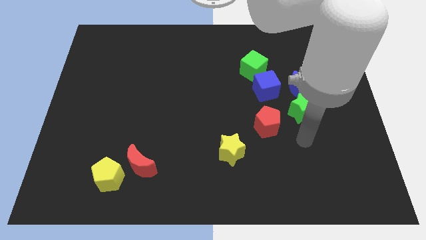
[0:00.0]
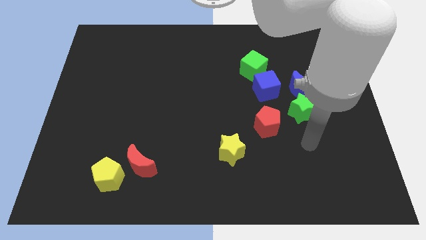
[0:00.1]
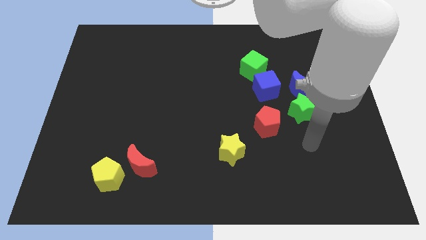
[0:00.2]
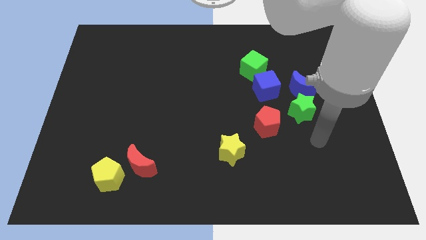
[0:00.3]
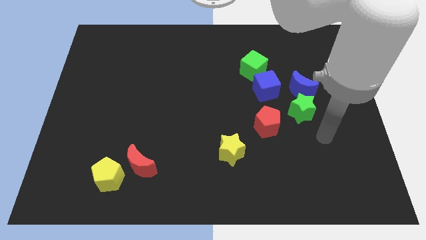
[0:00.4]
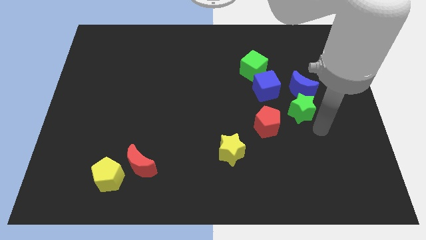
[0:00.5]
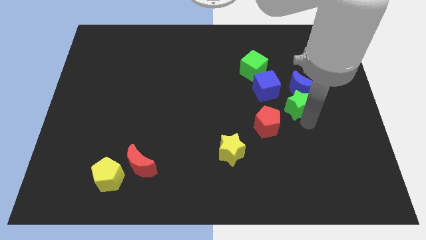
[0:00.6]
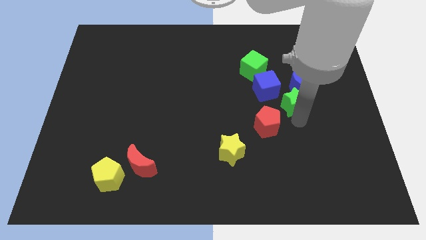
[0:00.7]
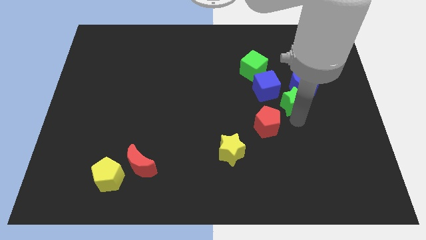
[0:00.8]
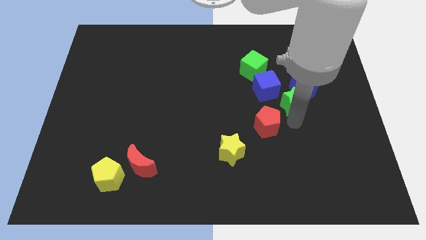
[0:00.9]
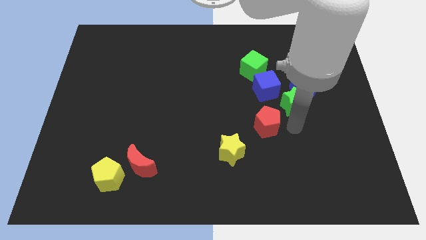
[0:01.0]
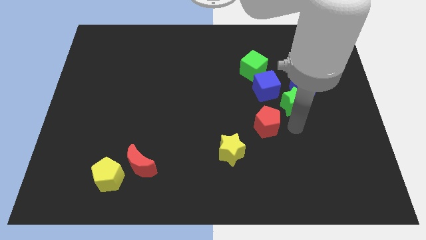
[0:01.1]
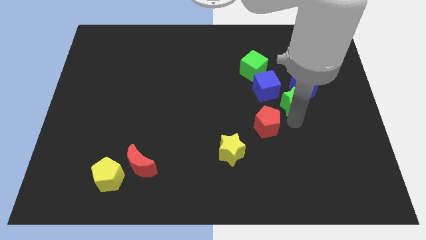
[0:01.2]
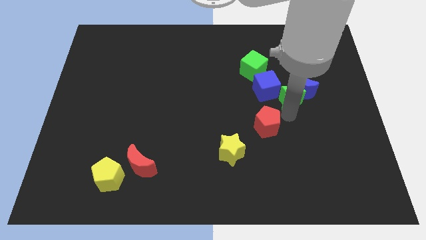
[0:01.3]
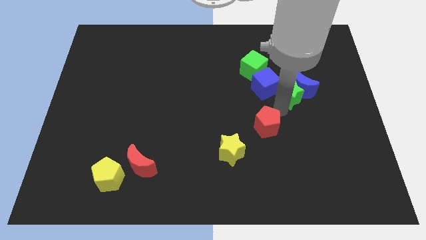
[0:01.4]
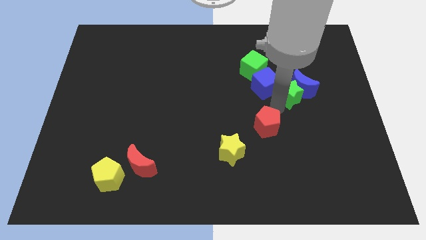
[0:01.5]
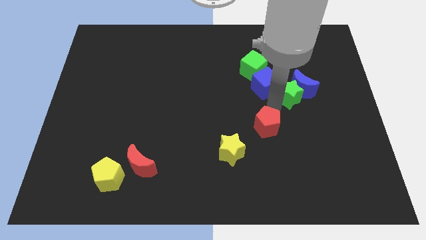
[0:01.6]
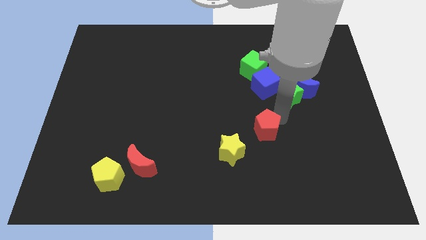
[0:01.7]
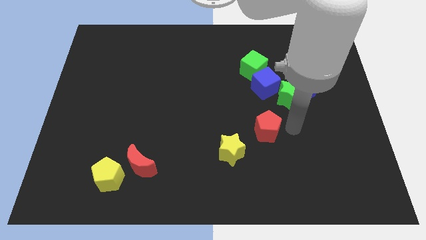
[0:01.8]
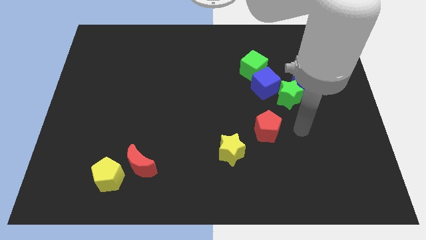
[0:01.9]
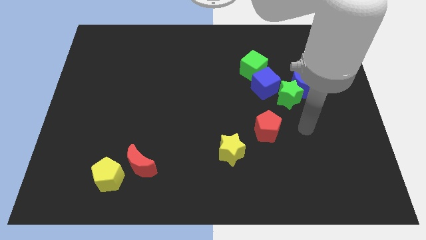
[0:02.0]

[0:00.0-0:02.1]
place green star into blue blocks

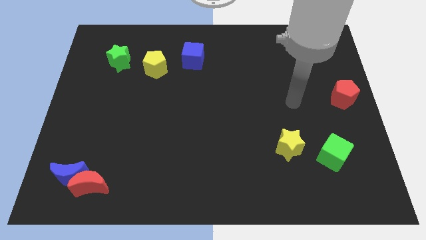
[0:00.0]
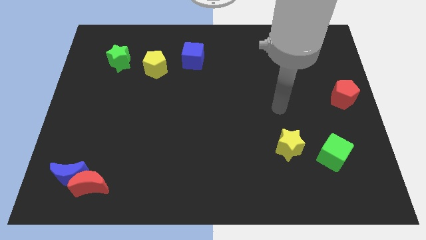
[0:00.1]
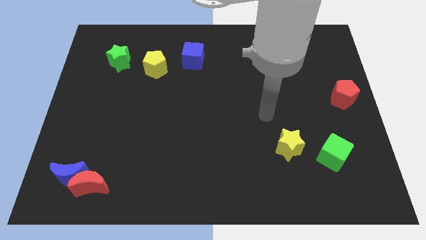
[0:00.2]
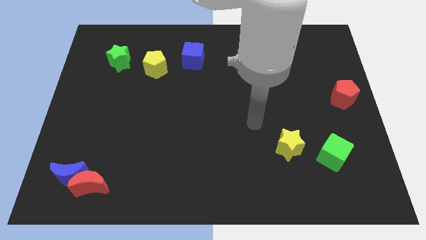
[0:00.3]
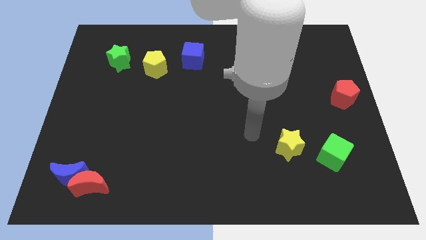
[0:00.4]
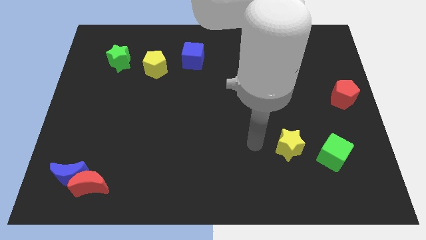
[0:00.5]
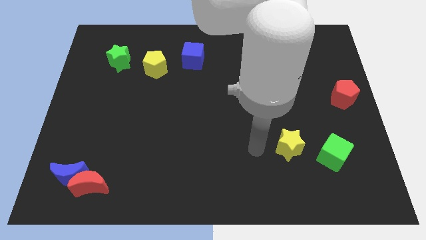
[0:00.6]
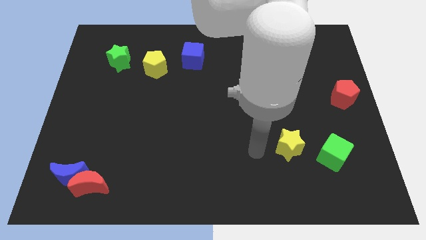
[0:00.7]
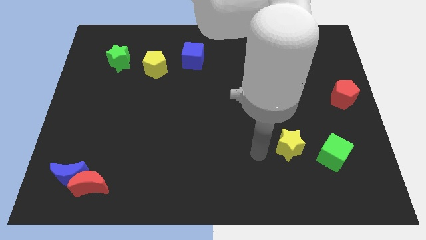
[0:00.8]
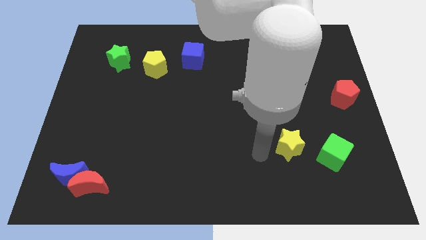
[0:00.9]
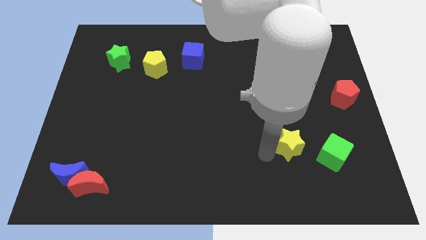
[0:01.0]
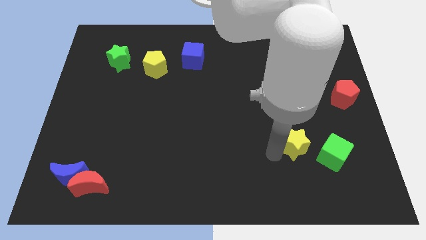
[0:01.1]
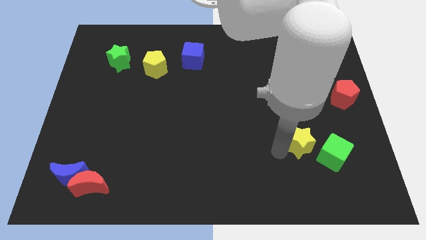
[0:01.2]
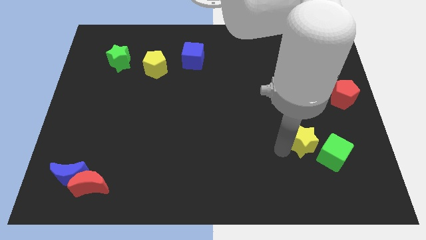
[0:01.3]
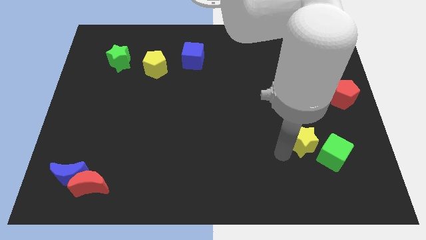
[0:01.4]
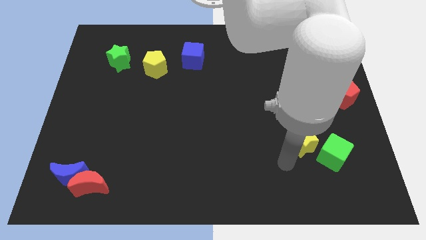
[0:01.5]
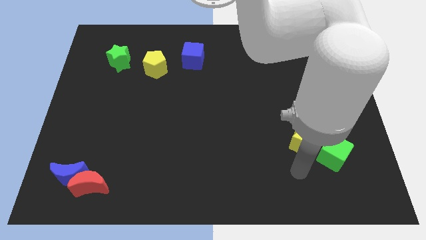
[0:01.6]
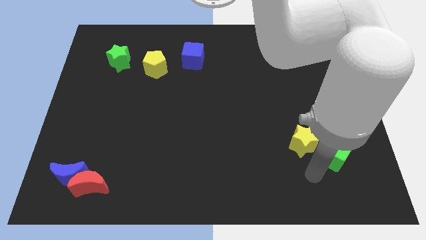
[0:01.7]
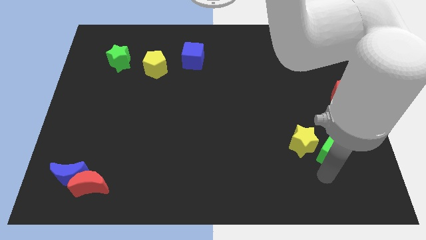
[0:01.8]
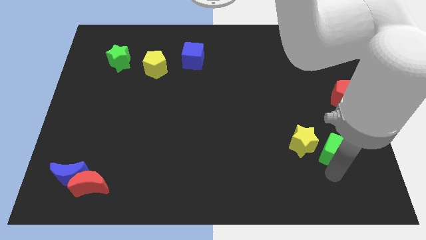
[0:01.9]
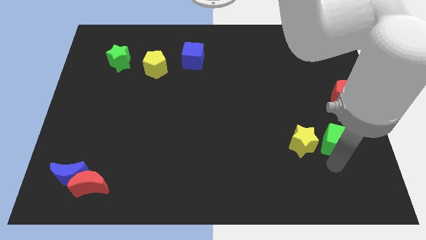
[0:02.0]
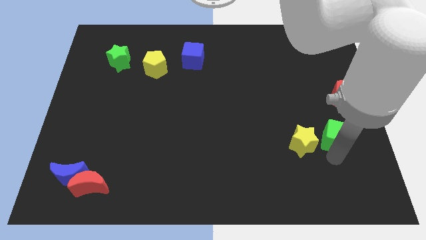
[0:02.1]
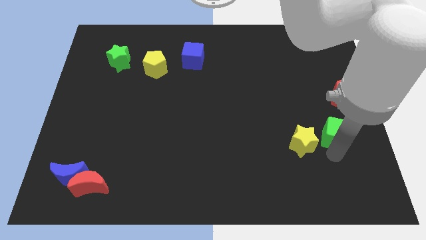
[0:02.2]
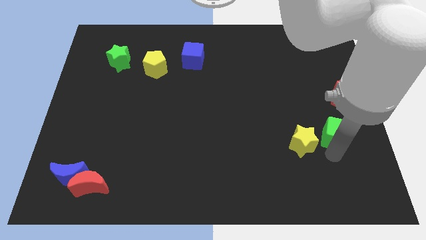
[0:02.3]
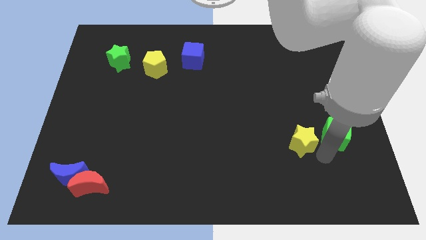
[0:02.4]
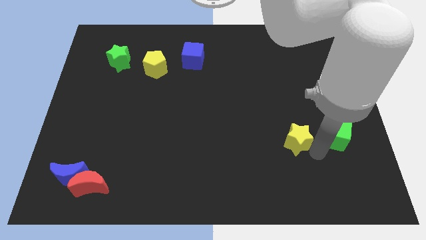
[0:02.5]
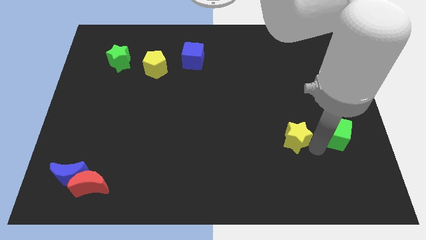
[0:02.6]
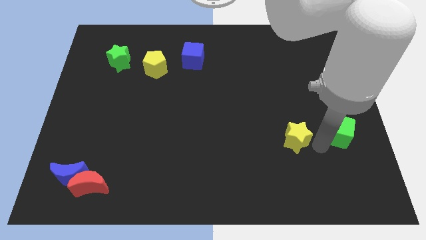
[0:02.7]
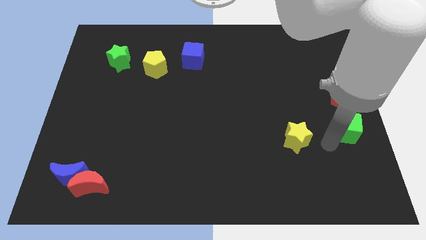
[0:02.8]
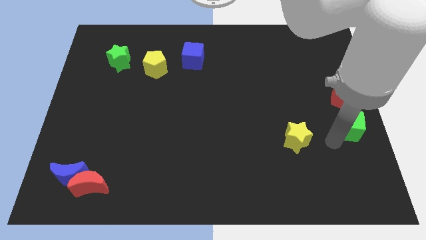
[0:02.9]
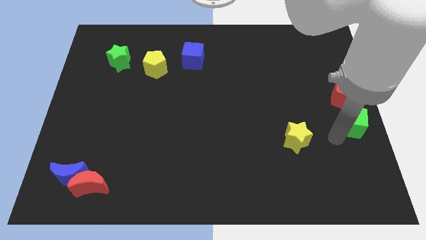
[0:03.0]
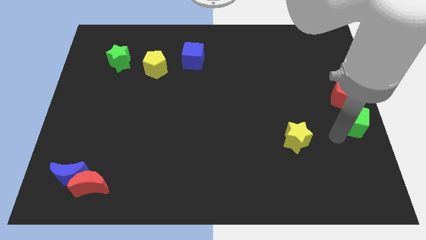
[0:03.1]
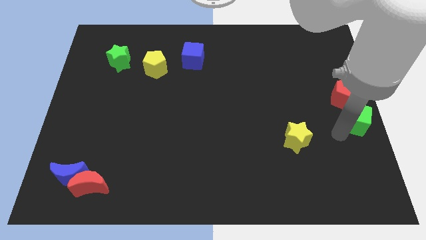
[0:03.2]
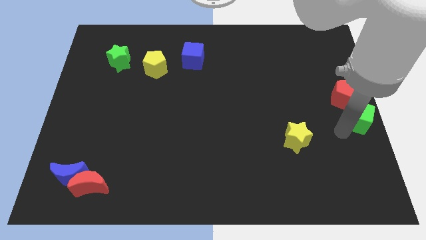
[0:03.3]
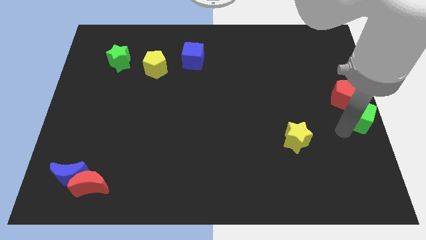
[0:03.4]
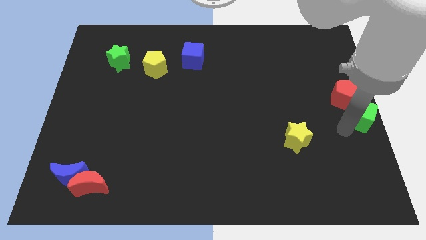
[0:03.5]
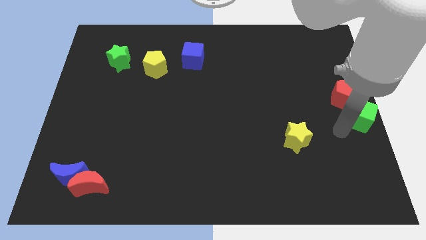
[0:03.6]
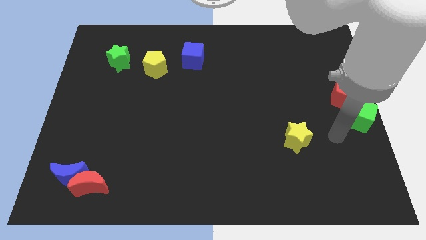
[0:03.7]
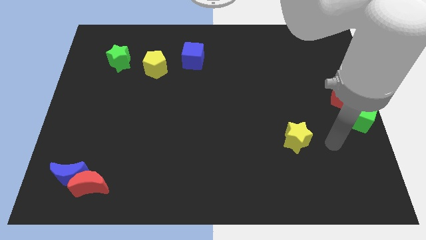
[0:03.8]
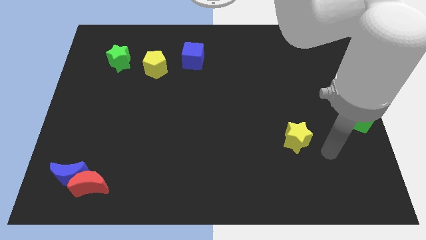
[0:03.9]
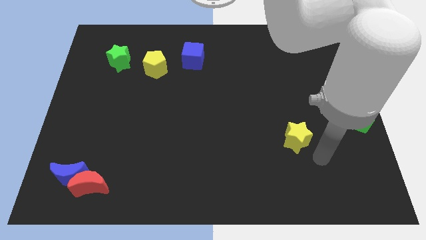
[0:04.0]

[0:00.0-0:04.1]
place the green cube to the bottom side of the red pentagon

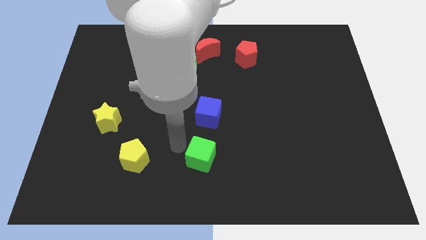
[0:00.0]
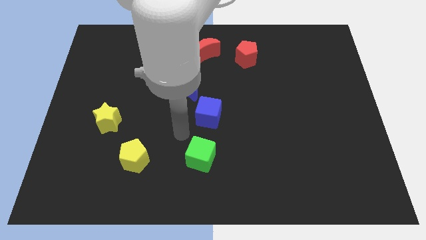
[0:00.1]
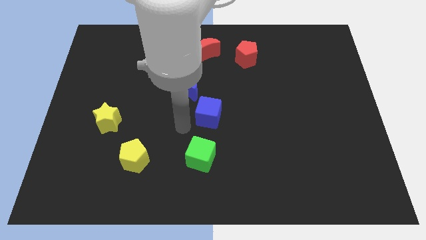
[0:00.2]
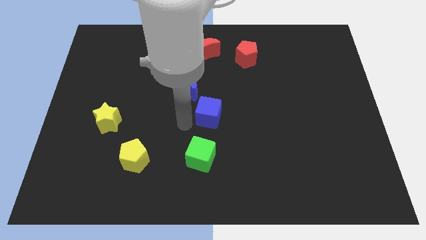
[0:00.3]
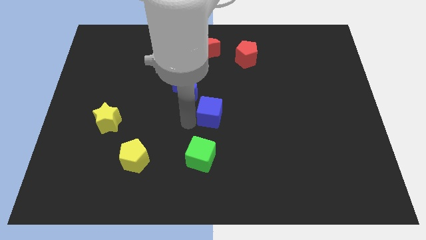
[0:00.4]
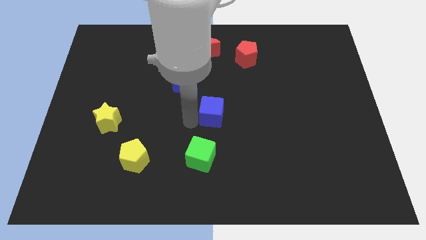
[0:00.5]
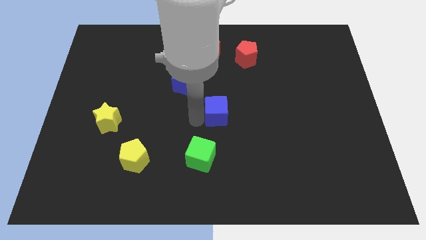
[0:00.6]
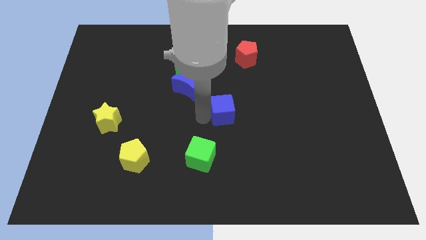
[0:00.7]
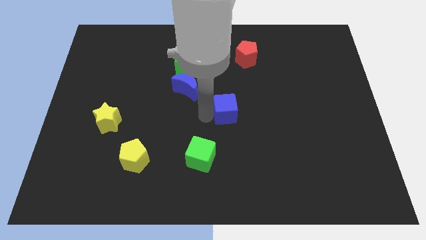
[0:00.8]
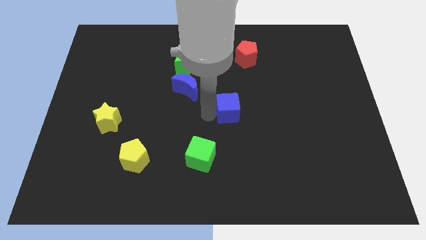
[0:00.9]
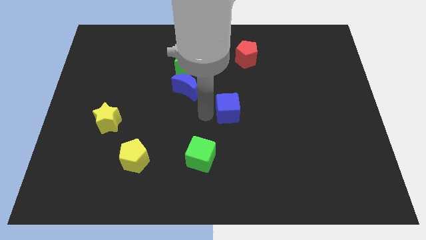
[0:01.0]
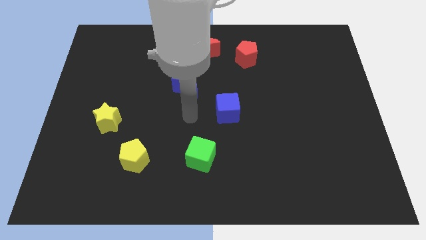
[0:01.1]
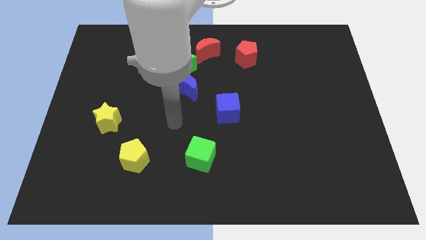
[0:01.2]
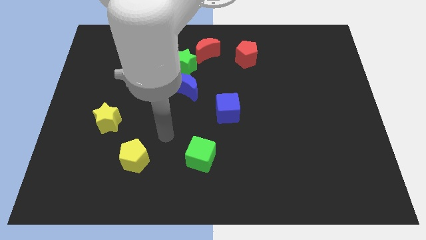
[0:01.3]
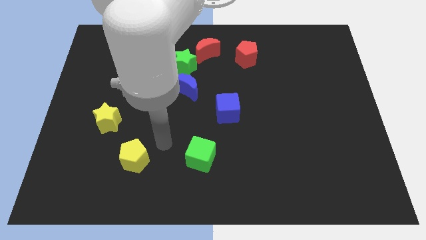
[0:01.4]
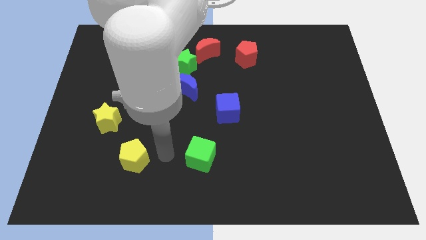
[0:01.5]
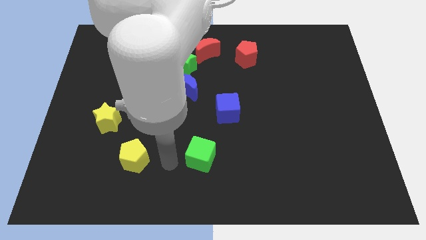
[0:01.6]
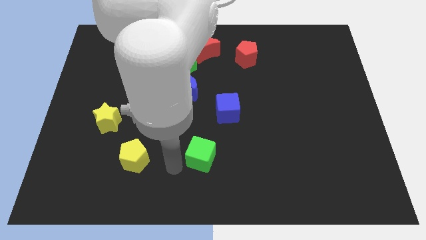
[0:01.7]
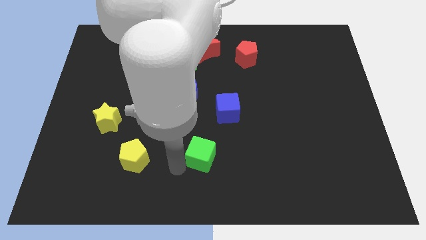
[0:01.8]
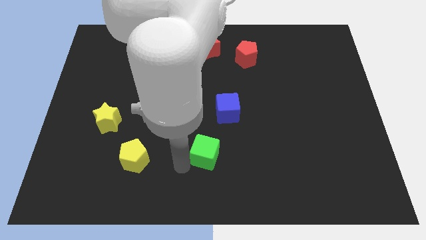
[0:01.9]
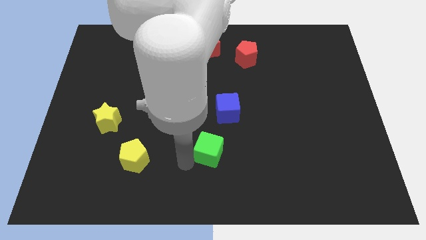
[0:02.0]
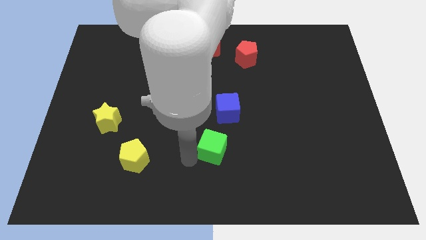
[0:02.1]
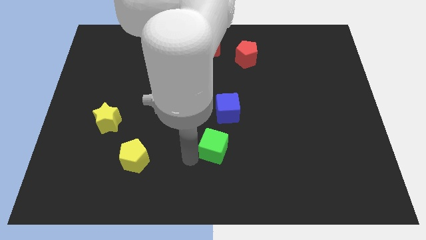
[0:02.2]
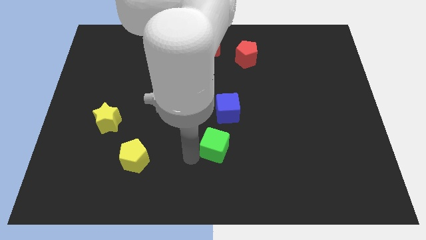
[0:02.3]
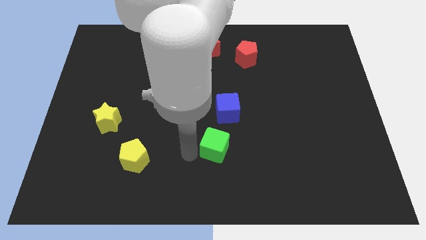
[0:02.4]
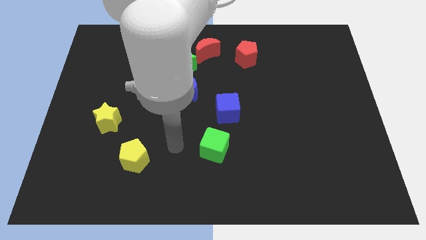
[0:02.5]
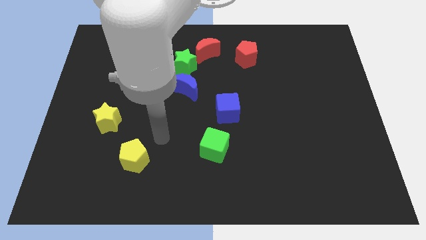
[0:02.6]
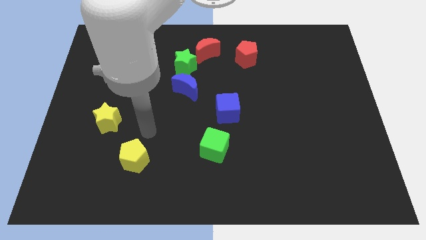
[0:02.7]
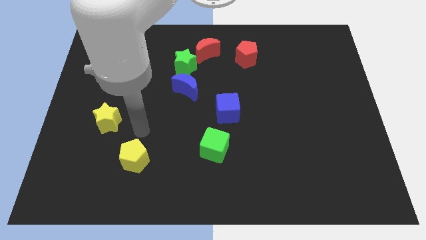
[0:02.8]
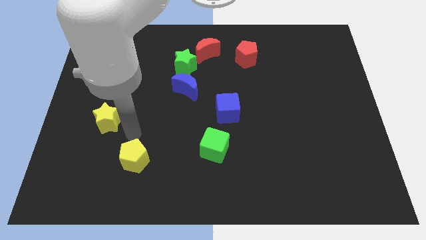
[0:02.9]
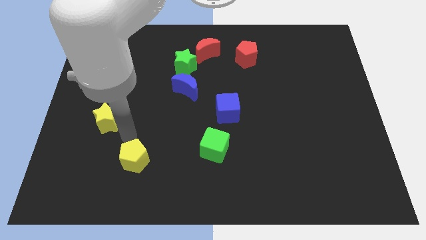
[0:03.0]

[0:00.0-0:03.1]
place the green cube close to the blue cube
